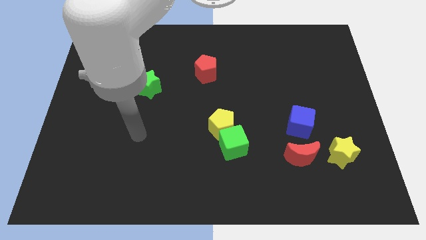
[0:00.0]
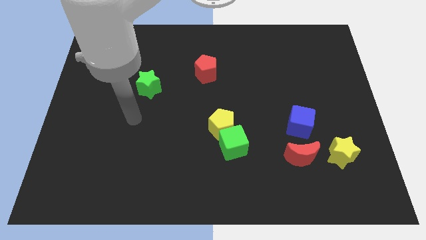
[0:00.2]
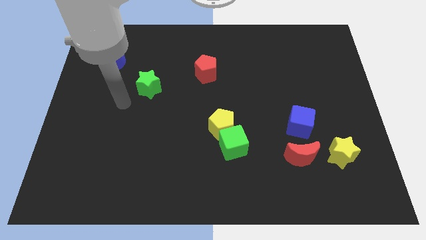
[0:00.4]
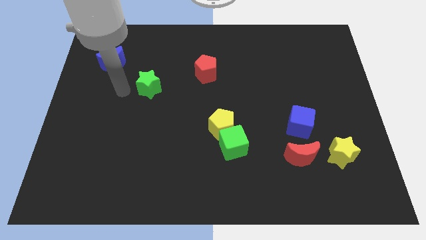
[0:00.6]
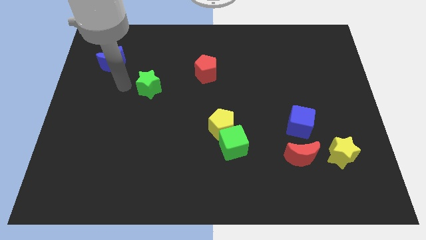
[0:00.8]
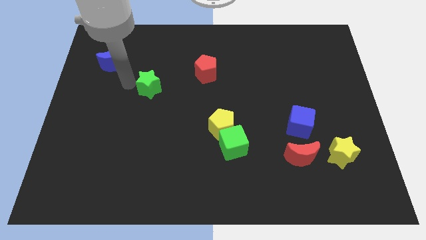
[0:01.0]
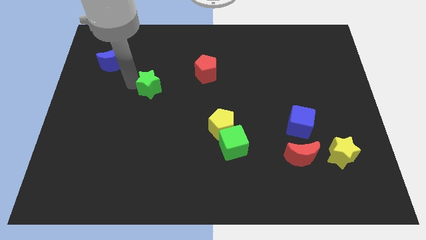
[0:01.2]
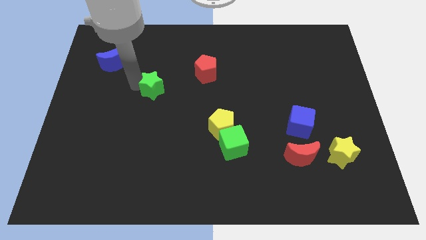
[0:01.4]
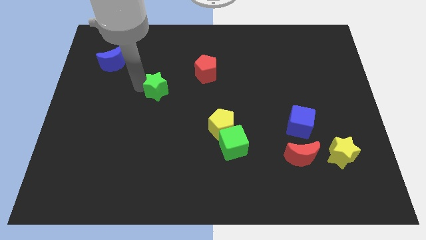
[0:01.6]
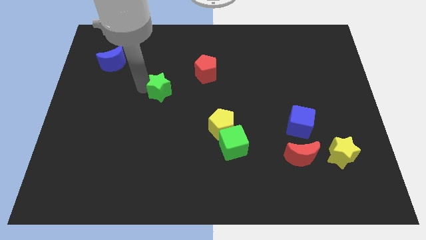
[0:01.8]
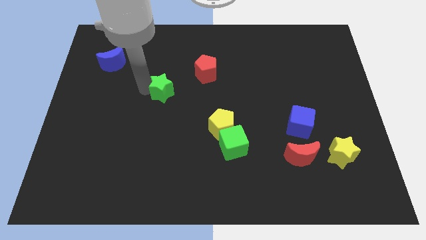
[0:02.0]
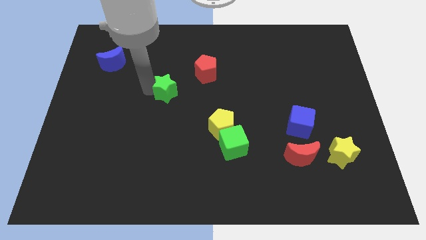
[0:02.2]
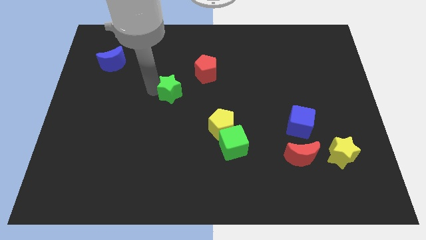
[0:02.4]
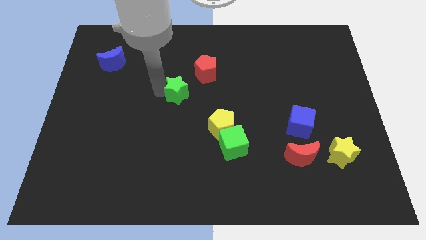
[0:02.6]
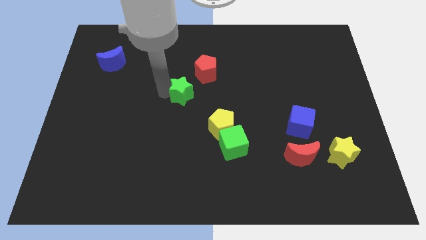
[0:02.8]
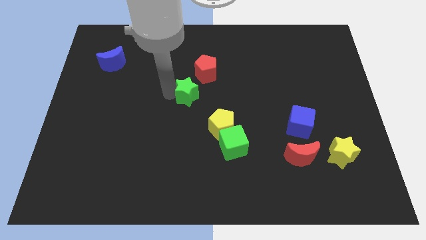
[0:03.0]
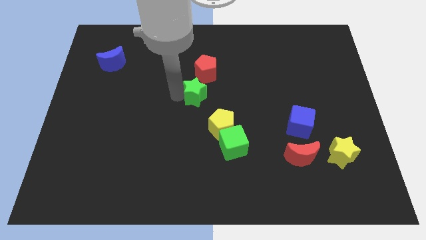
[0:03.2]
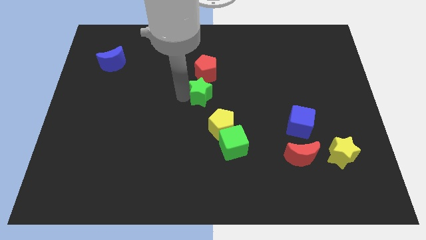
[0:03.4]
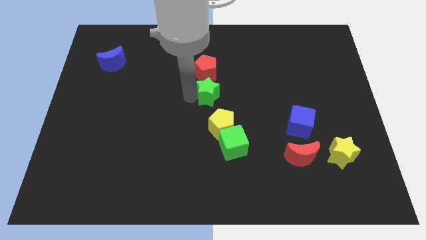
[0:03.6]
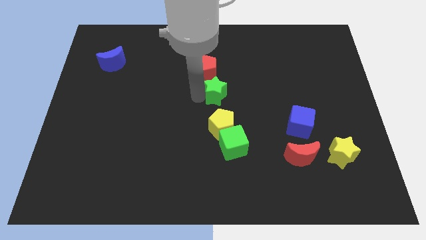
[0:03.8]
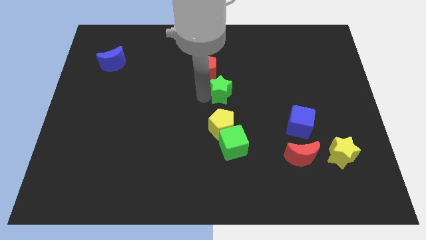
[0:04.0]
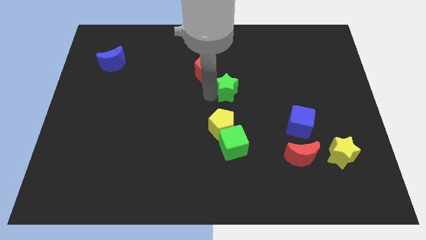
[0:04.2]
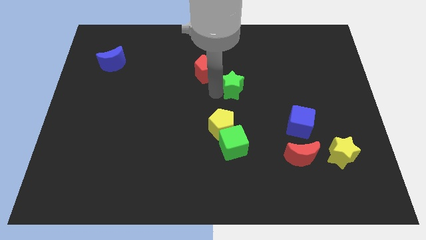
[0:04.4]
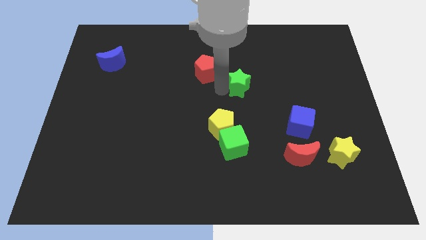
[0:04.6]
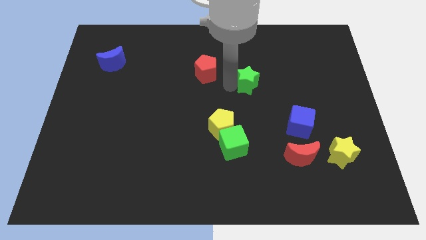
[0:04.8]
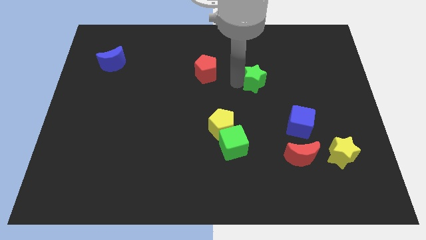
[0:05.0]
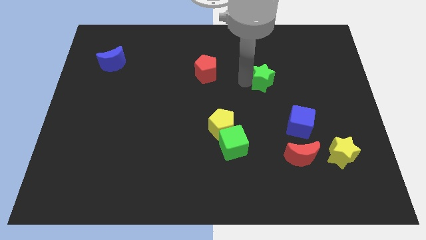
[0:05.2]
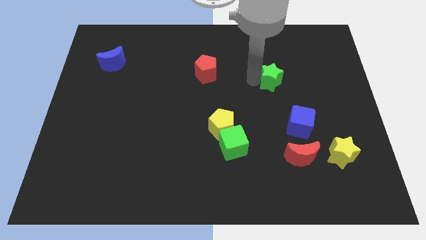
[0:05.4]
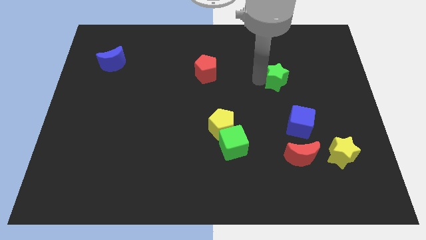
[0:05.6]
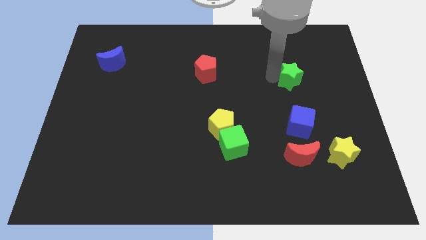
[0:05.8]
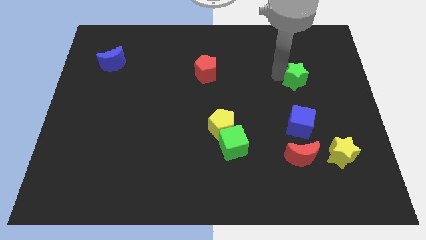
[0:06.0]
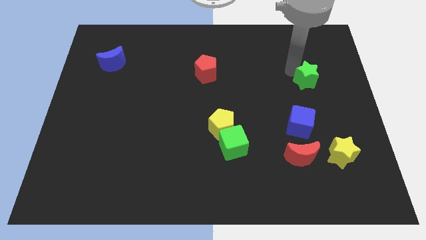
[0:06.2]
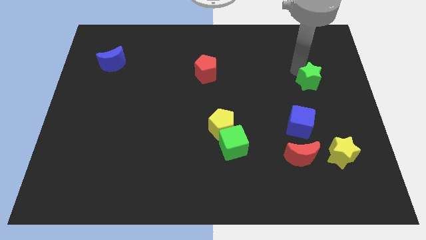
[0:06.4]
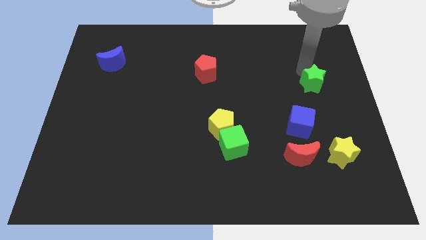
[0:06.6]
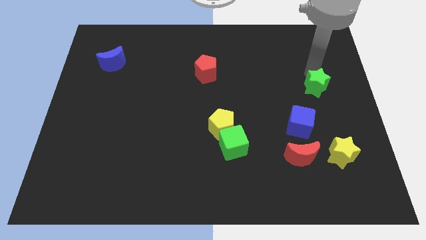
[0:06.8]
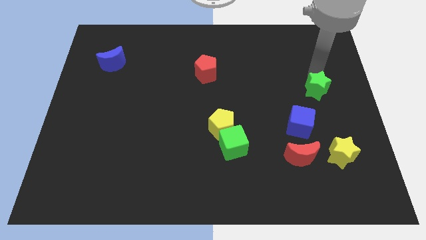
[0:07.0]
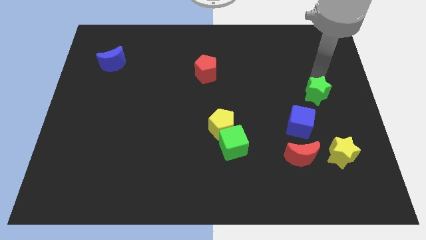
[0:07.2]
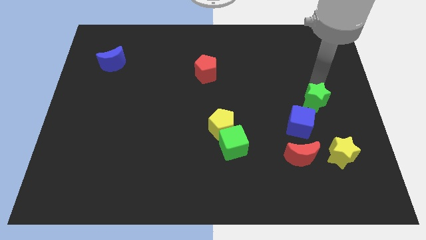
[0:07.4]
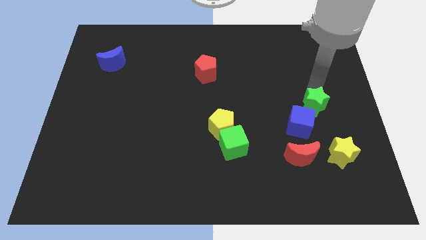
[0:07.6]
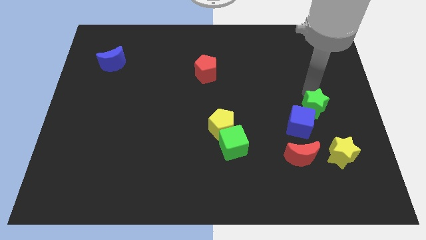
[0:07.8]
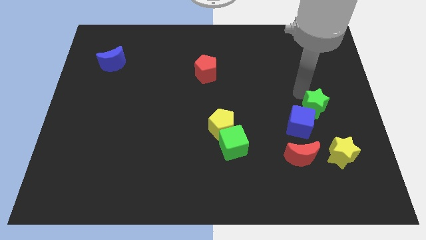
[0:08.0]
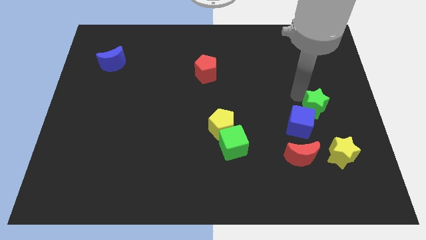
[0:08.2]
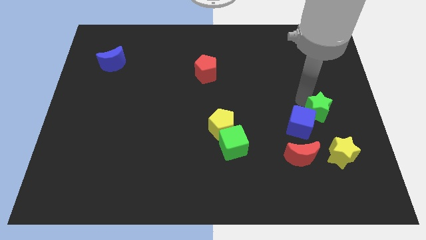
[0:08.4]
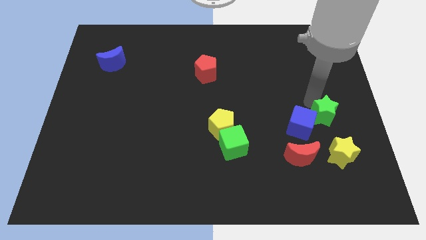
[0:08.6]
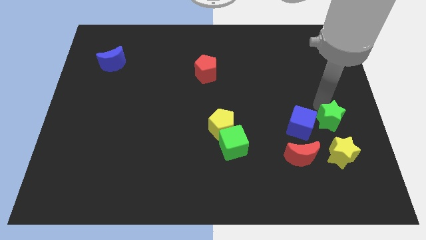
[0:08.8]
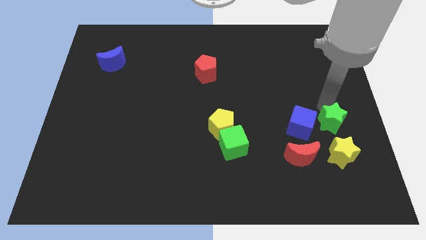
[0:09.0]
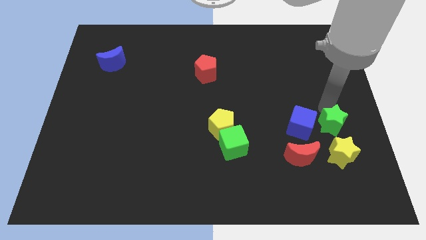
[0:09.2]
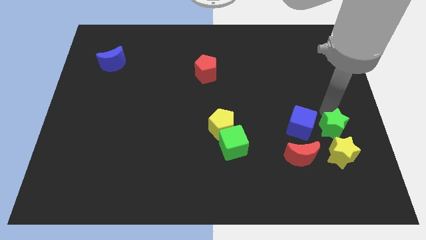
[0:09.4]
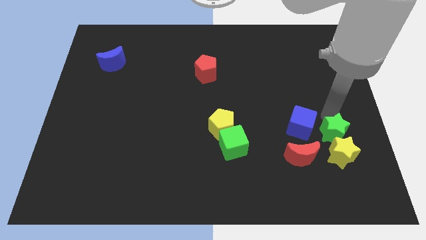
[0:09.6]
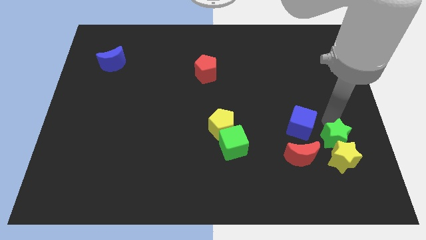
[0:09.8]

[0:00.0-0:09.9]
put the green star next to the yellow star

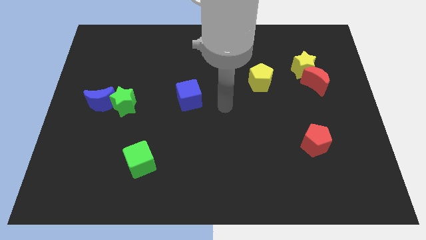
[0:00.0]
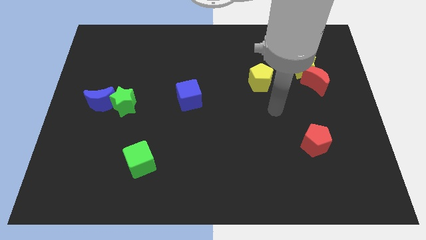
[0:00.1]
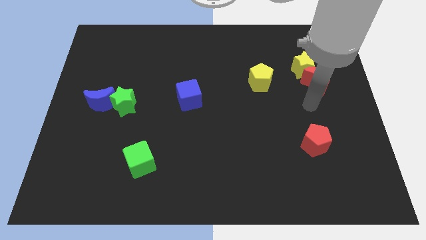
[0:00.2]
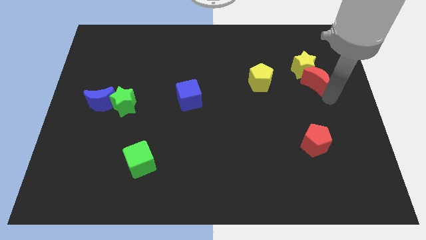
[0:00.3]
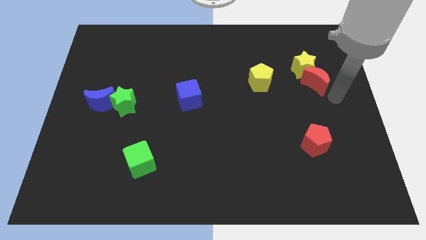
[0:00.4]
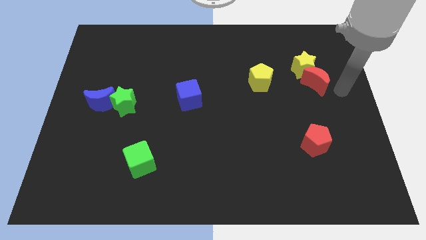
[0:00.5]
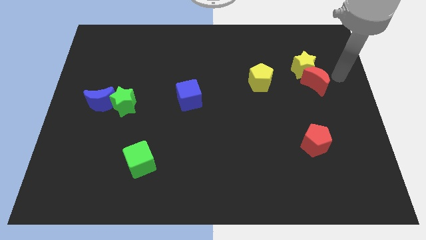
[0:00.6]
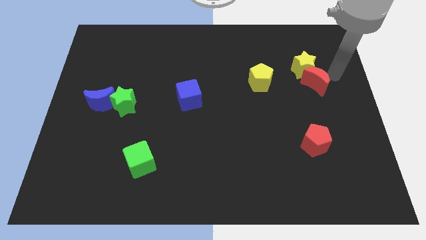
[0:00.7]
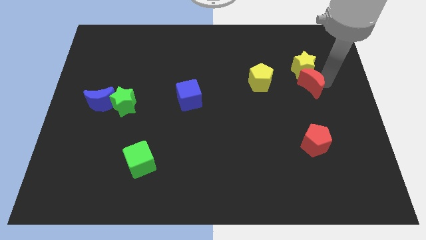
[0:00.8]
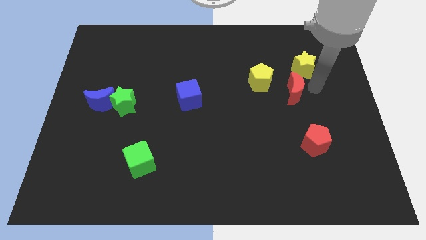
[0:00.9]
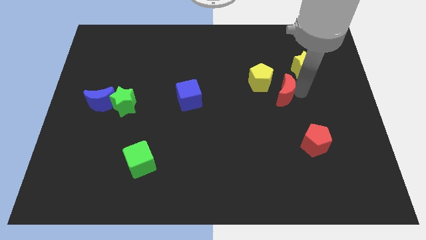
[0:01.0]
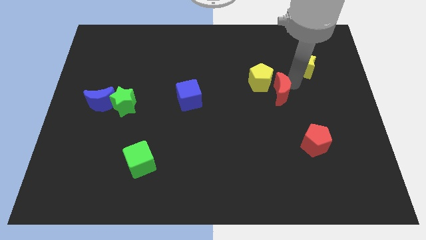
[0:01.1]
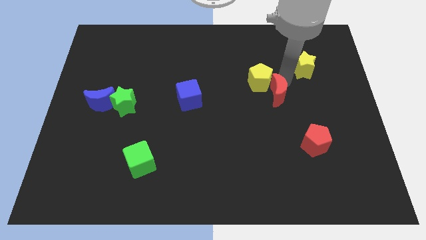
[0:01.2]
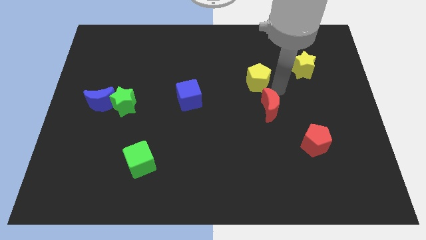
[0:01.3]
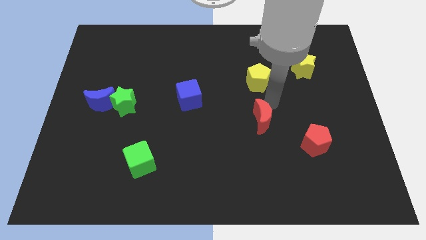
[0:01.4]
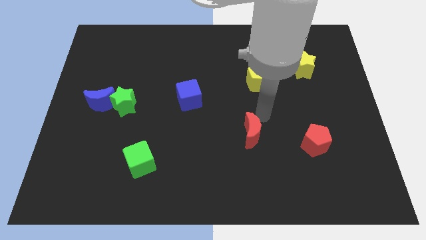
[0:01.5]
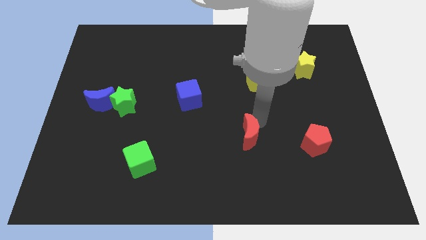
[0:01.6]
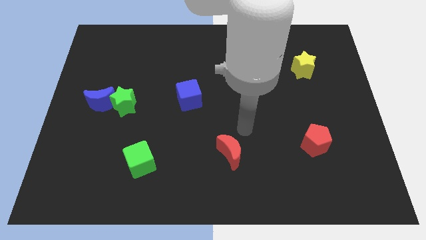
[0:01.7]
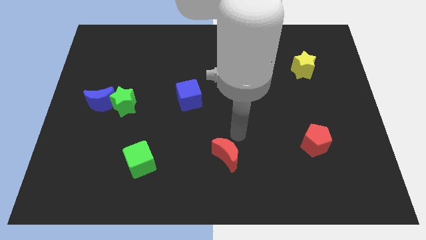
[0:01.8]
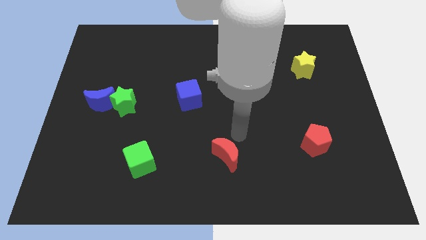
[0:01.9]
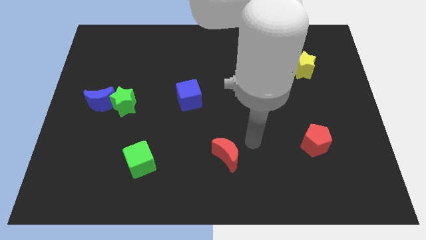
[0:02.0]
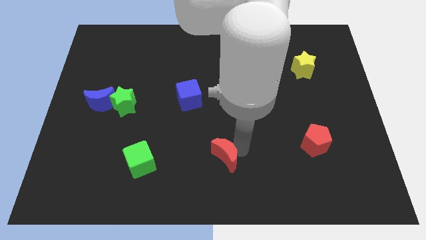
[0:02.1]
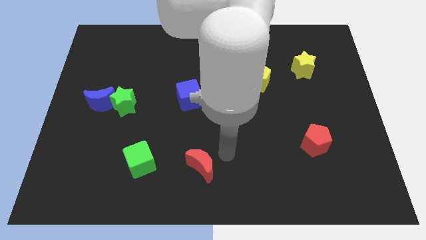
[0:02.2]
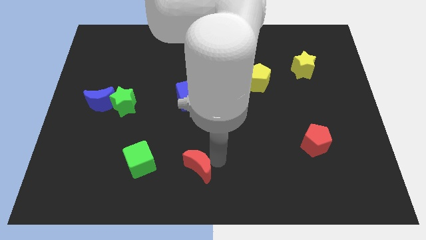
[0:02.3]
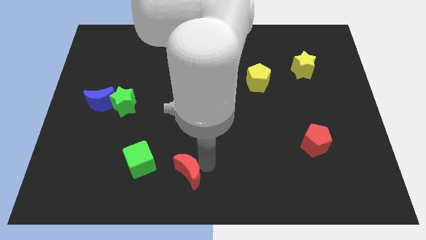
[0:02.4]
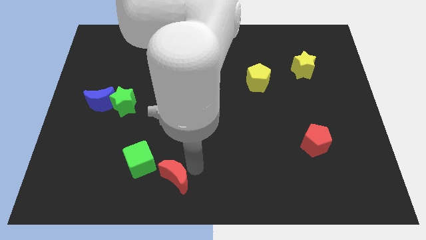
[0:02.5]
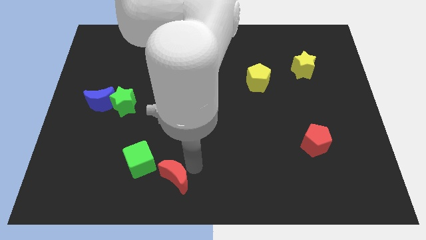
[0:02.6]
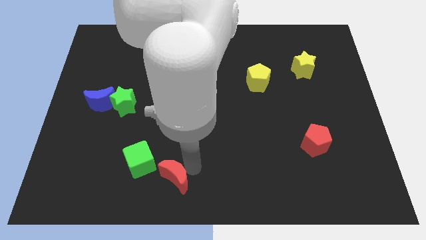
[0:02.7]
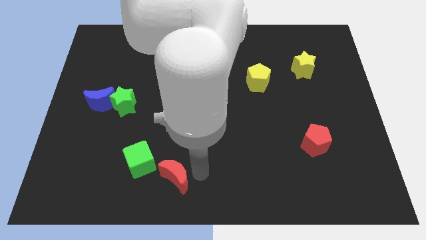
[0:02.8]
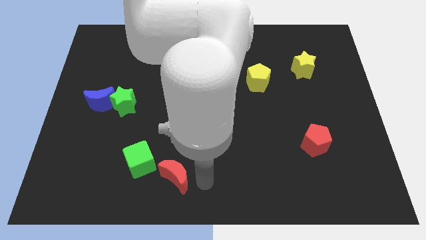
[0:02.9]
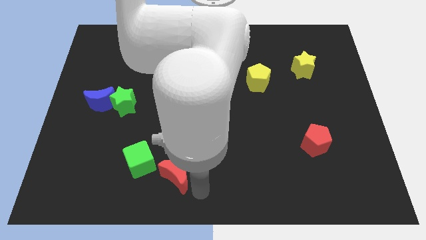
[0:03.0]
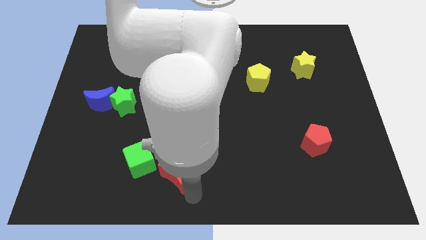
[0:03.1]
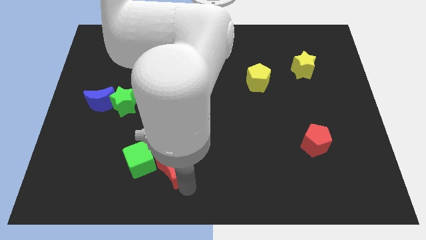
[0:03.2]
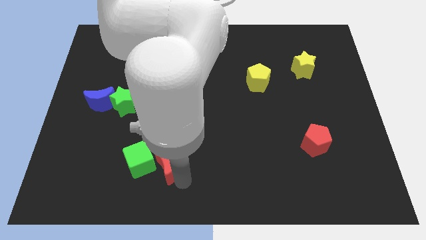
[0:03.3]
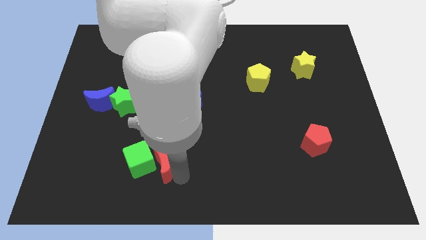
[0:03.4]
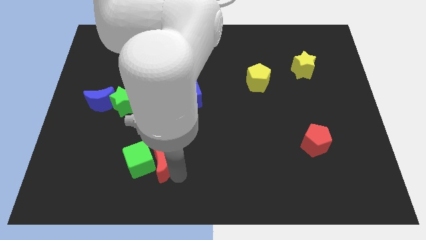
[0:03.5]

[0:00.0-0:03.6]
push the red moon to the green cube
